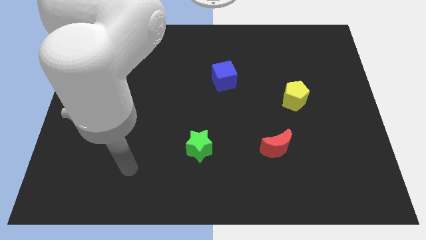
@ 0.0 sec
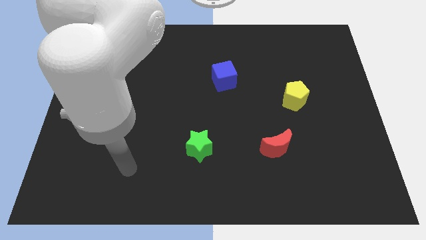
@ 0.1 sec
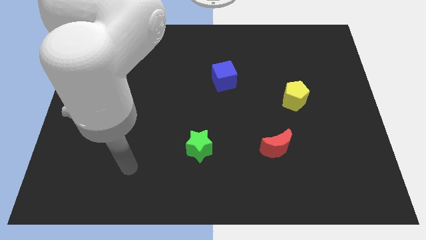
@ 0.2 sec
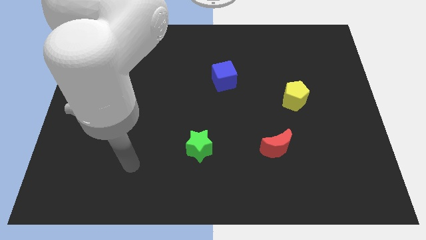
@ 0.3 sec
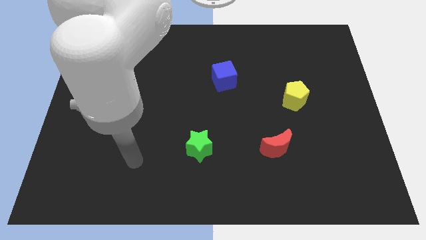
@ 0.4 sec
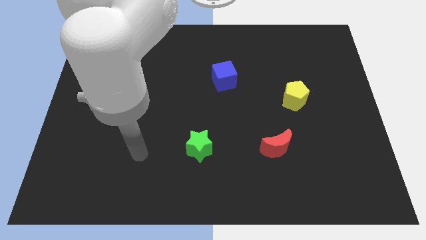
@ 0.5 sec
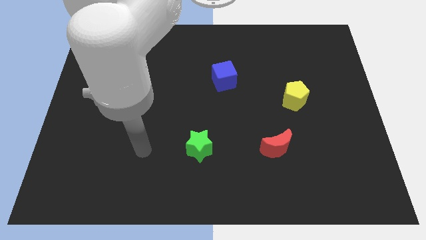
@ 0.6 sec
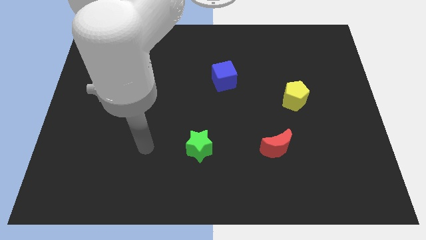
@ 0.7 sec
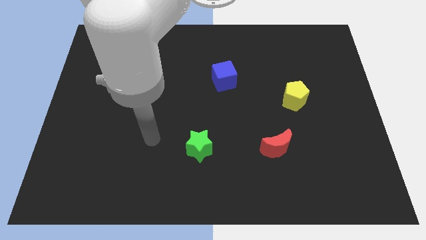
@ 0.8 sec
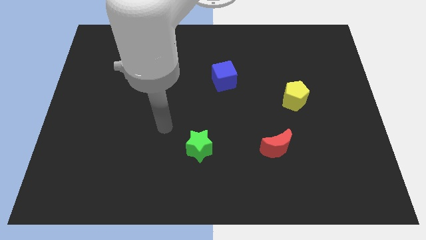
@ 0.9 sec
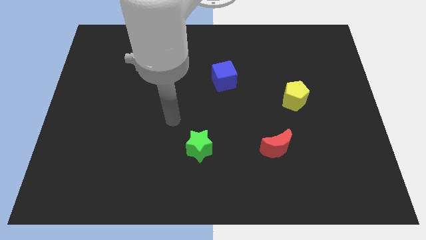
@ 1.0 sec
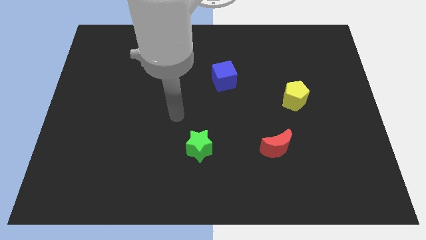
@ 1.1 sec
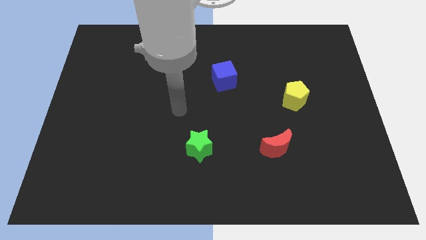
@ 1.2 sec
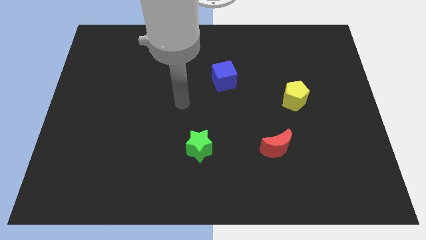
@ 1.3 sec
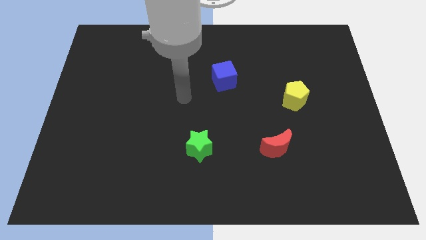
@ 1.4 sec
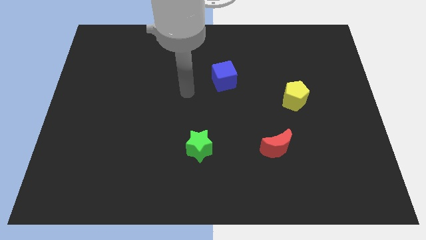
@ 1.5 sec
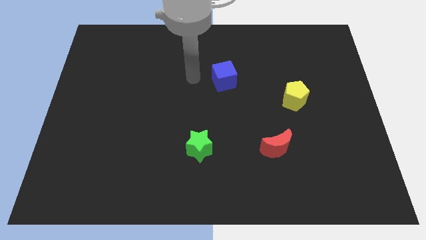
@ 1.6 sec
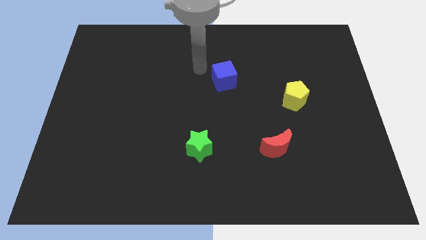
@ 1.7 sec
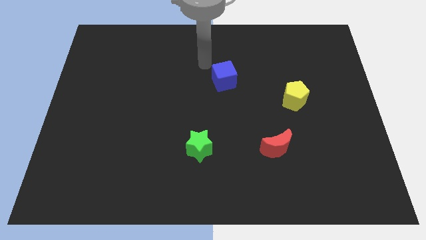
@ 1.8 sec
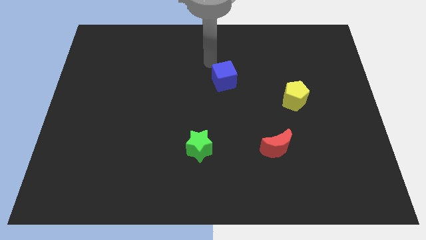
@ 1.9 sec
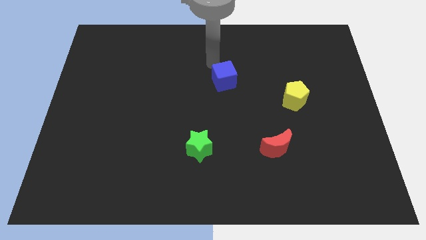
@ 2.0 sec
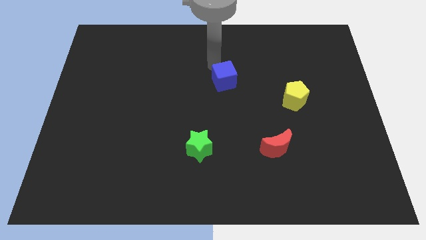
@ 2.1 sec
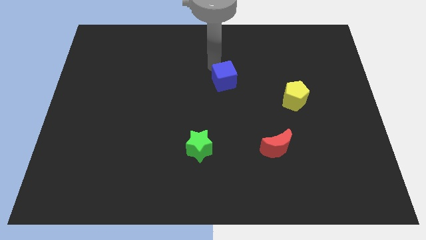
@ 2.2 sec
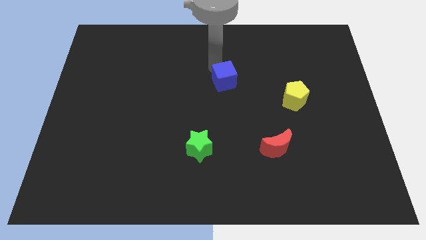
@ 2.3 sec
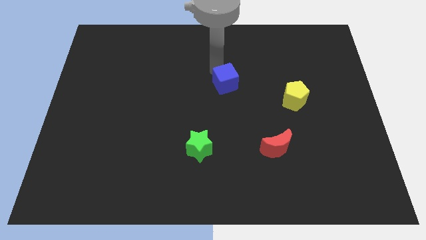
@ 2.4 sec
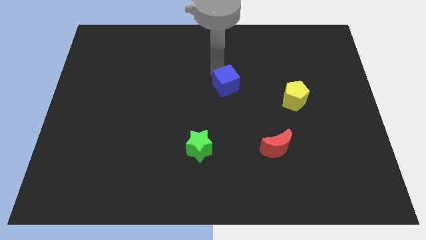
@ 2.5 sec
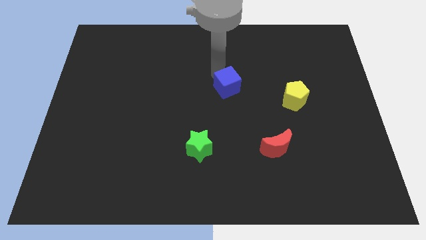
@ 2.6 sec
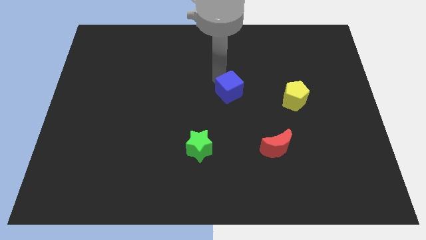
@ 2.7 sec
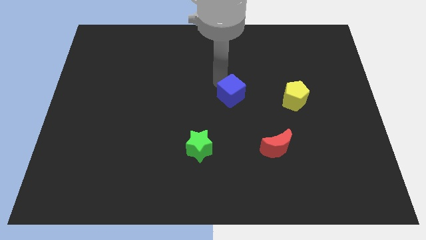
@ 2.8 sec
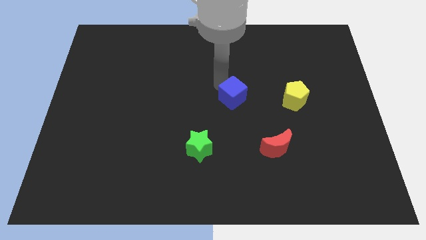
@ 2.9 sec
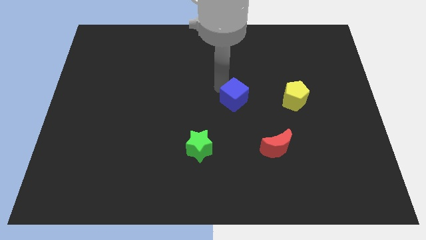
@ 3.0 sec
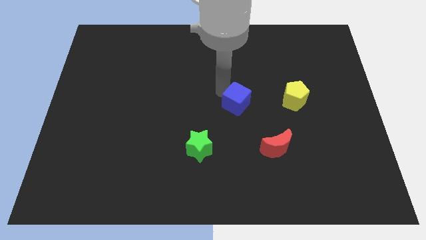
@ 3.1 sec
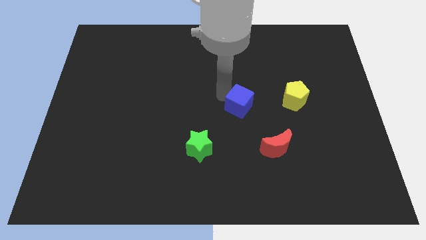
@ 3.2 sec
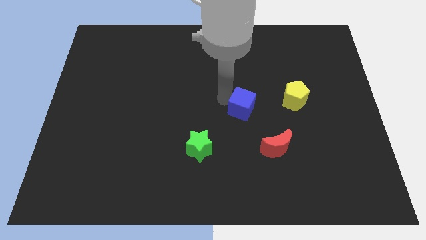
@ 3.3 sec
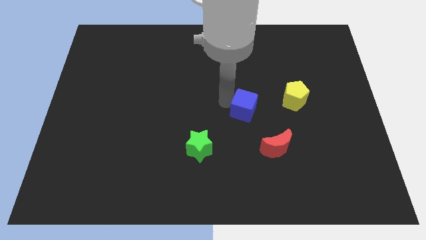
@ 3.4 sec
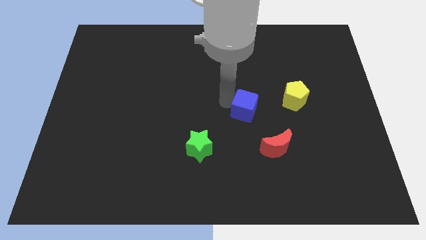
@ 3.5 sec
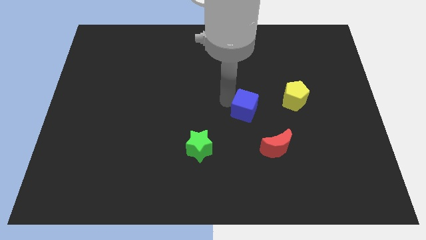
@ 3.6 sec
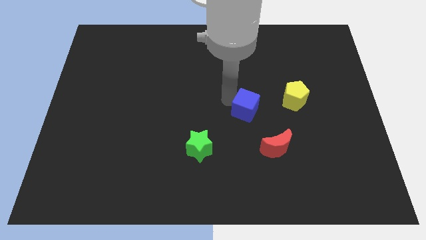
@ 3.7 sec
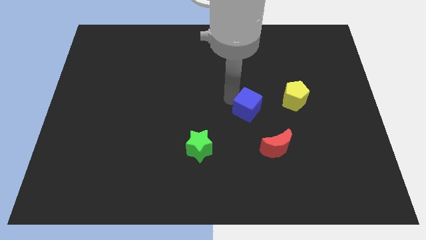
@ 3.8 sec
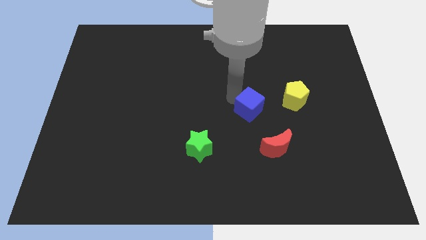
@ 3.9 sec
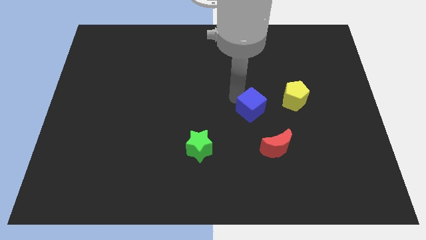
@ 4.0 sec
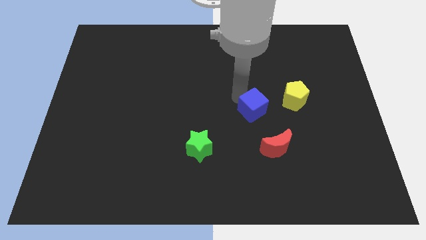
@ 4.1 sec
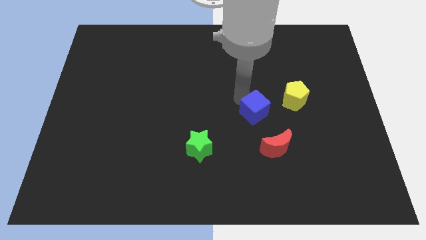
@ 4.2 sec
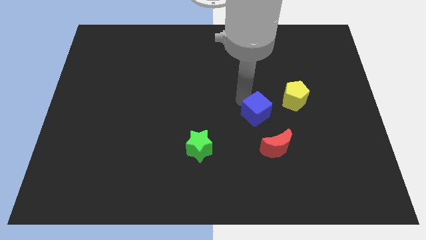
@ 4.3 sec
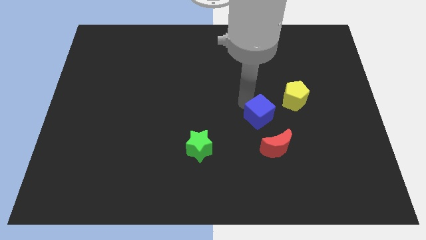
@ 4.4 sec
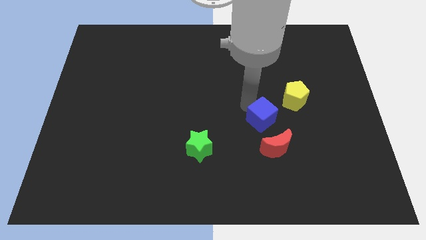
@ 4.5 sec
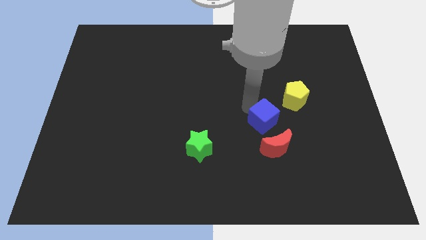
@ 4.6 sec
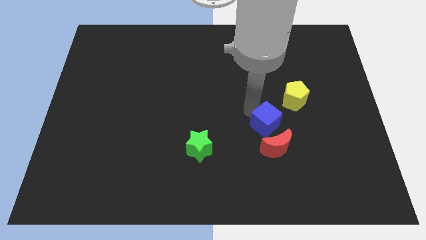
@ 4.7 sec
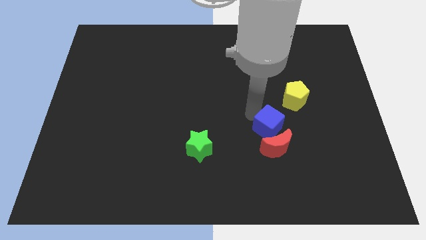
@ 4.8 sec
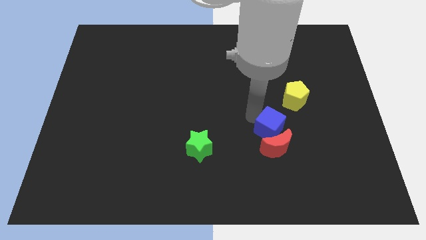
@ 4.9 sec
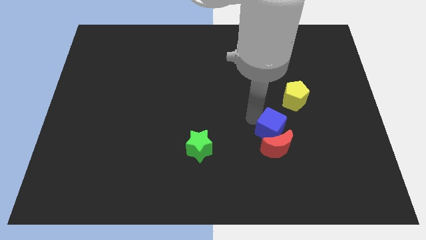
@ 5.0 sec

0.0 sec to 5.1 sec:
put the cube next to the red moon

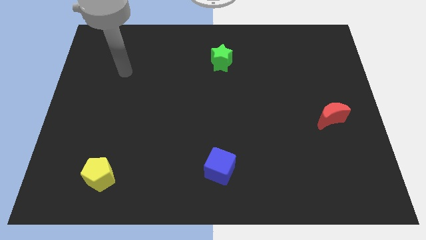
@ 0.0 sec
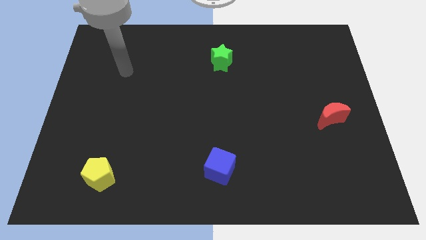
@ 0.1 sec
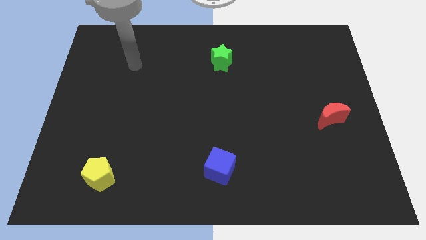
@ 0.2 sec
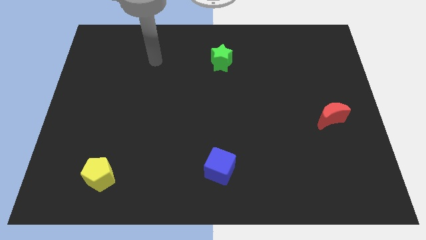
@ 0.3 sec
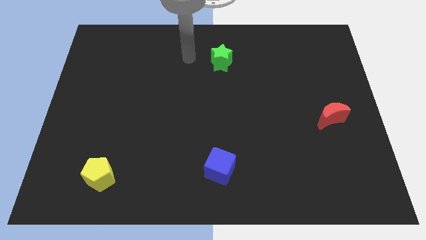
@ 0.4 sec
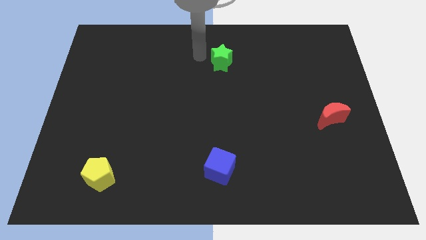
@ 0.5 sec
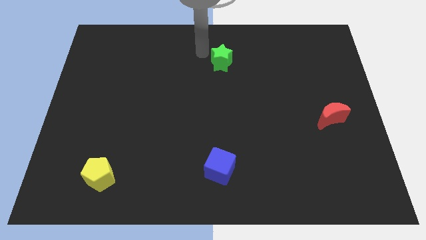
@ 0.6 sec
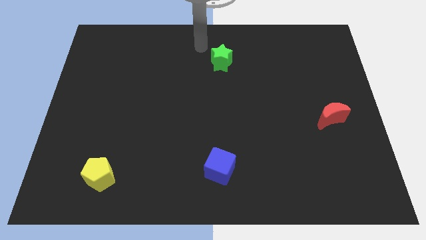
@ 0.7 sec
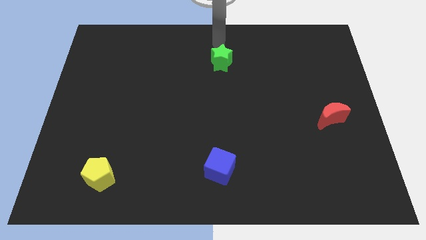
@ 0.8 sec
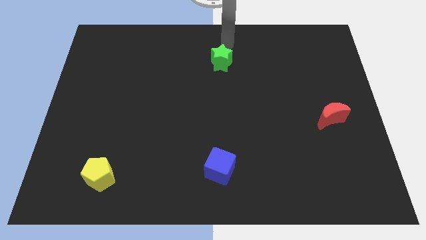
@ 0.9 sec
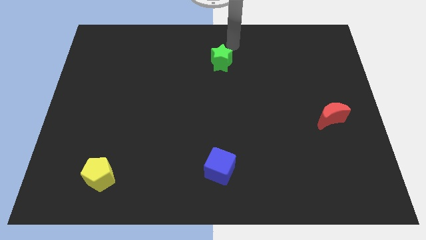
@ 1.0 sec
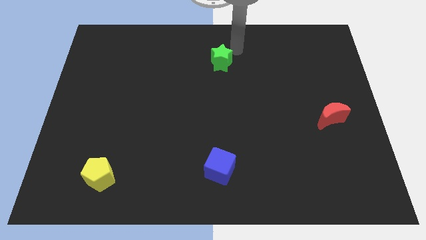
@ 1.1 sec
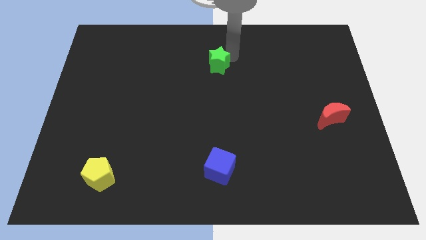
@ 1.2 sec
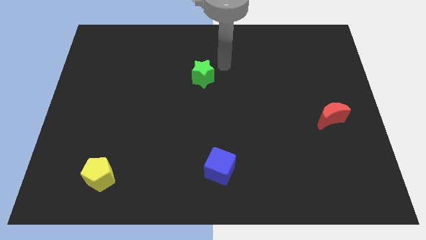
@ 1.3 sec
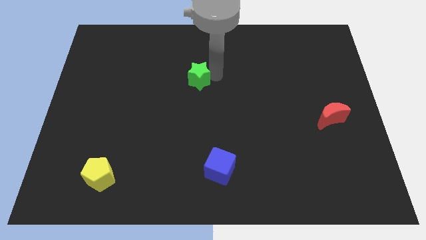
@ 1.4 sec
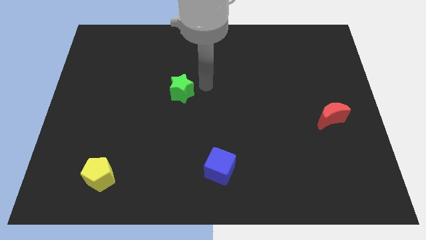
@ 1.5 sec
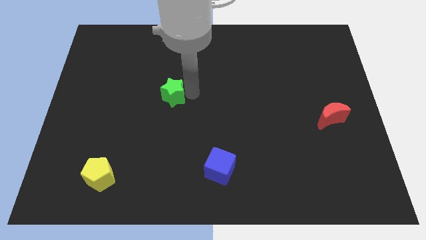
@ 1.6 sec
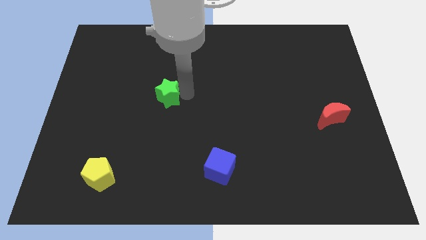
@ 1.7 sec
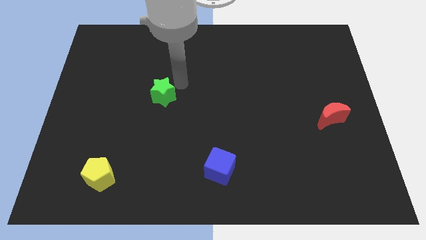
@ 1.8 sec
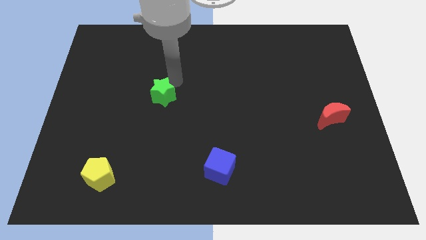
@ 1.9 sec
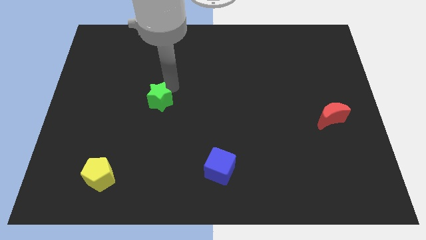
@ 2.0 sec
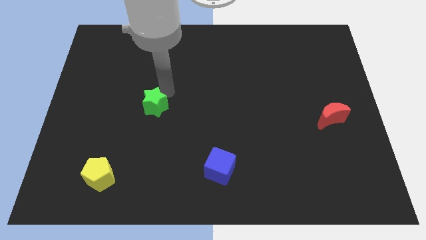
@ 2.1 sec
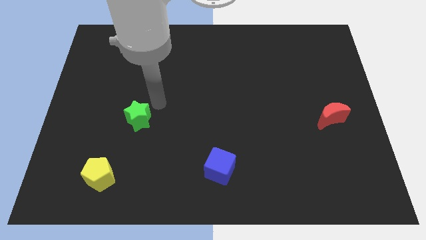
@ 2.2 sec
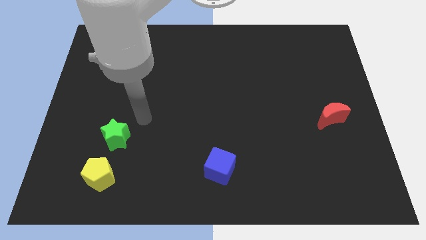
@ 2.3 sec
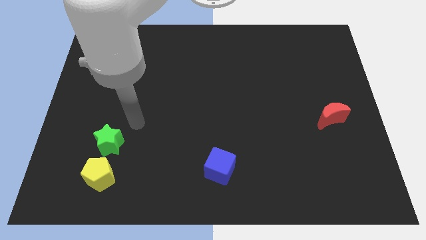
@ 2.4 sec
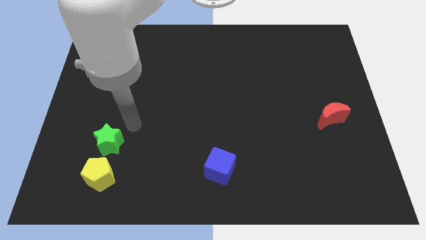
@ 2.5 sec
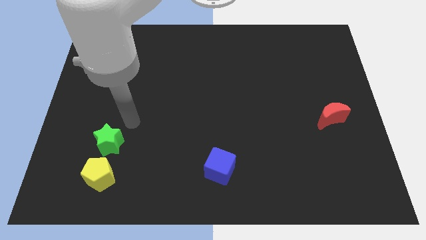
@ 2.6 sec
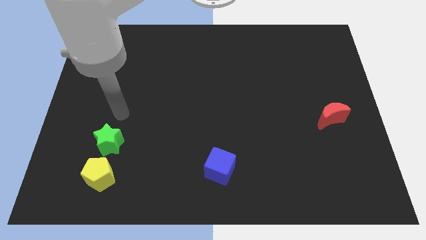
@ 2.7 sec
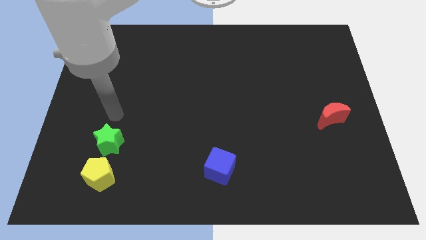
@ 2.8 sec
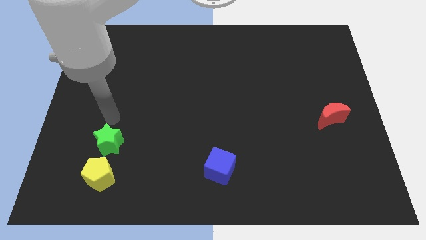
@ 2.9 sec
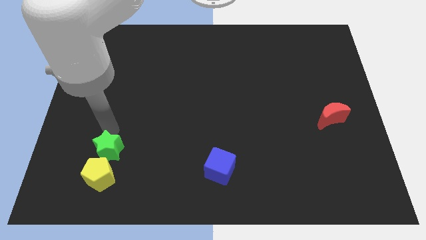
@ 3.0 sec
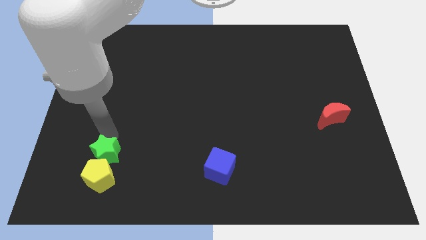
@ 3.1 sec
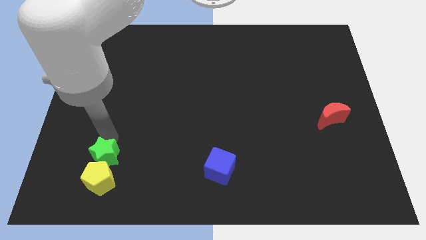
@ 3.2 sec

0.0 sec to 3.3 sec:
put the green block to the yellow block
